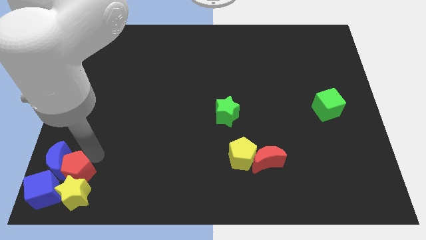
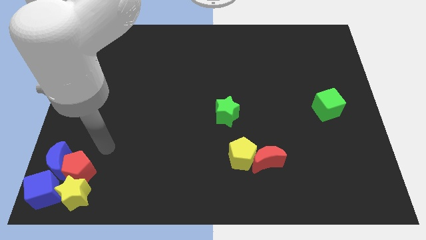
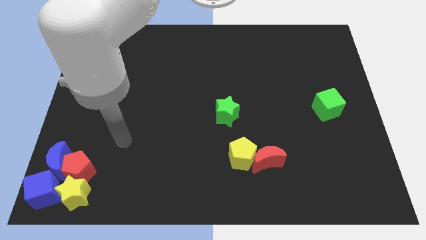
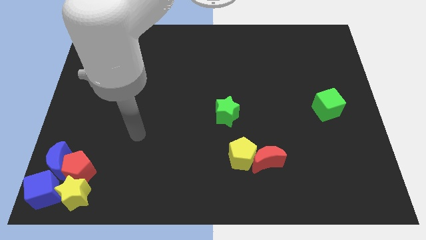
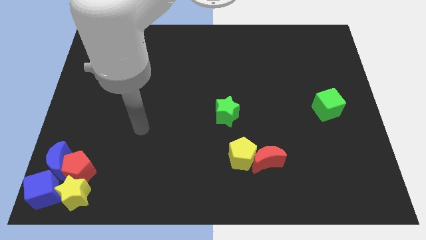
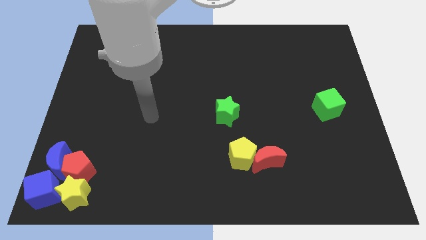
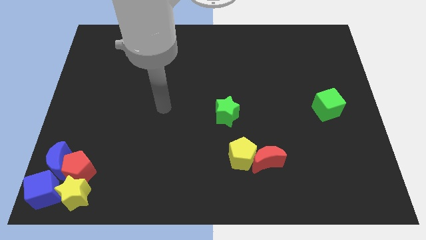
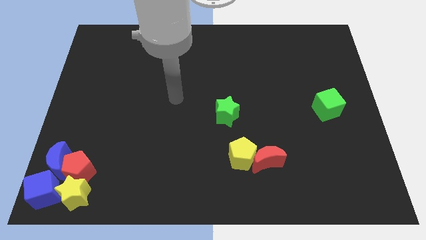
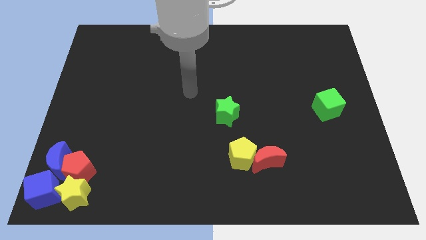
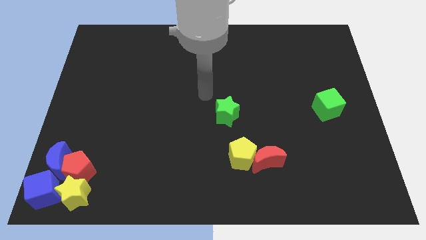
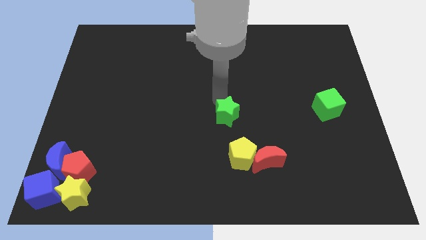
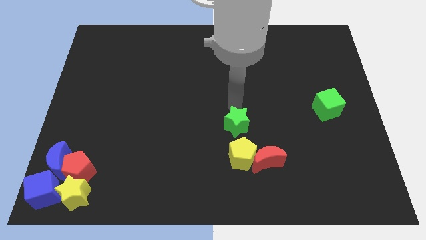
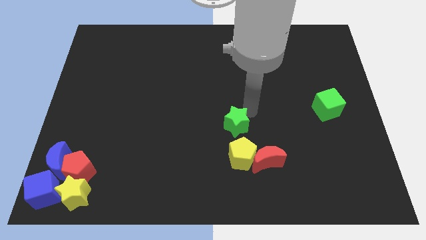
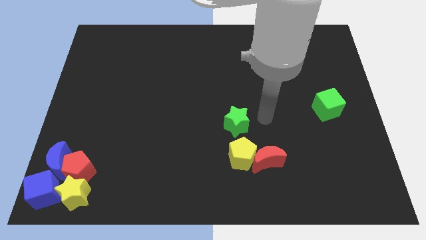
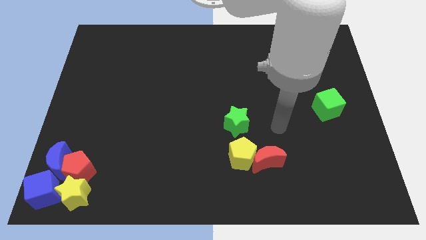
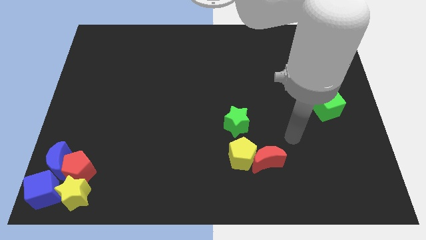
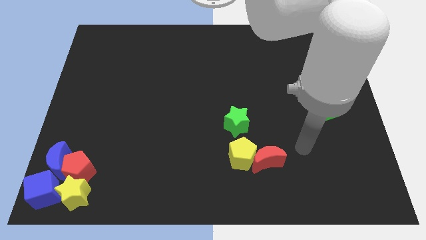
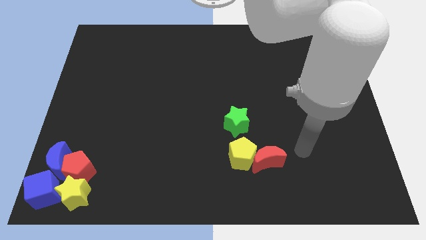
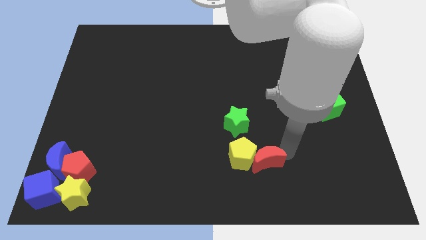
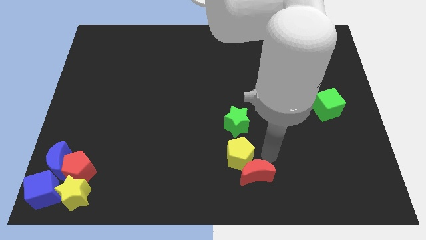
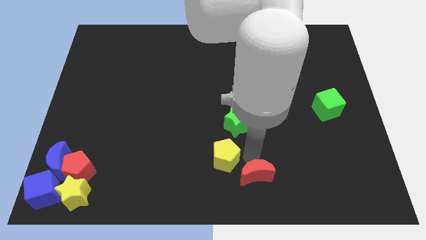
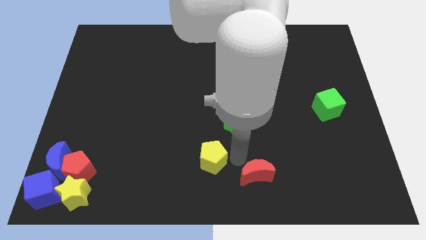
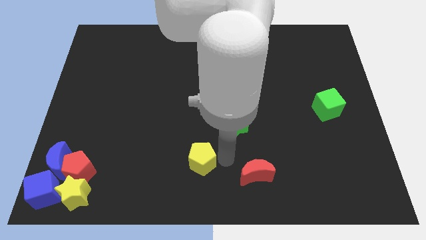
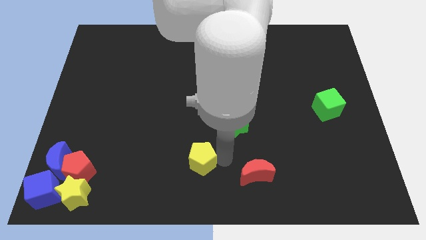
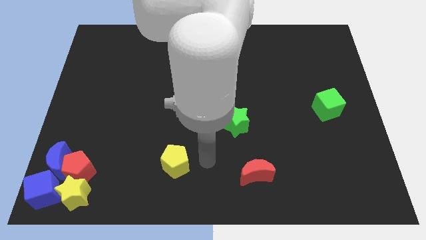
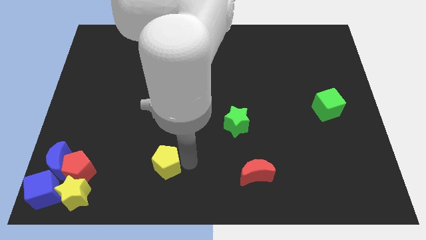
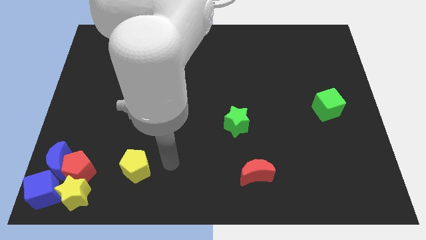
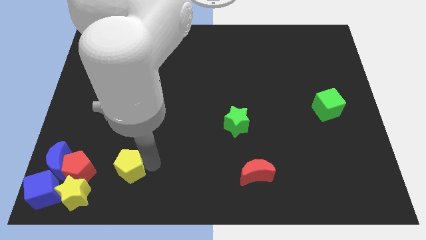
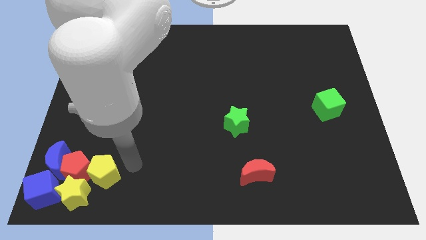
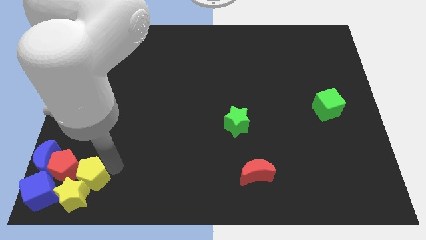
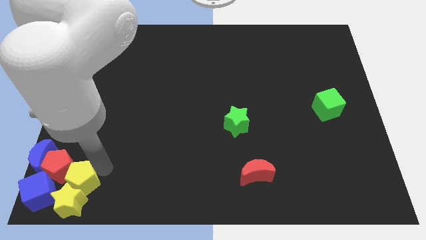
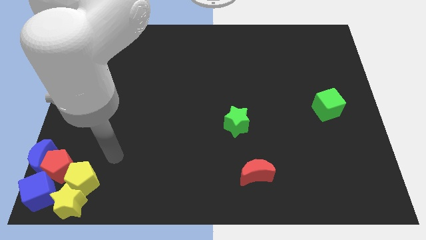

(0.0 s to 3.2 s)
push the yellow pentagon into the yellow star

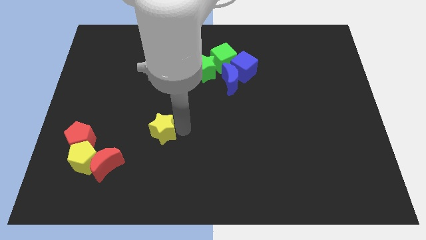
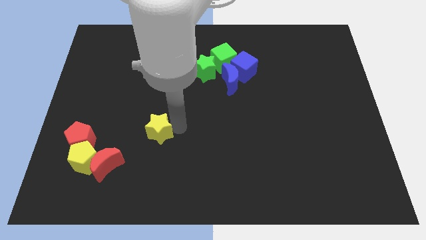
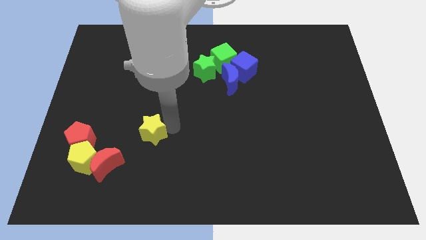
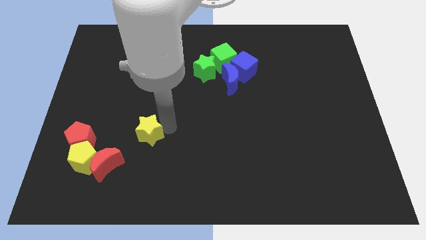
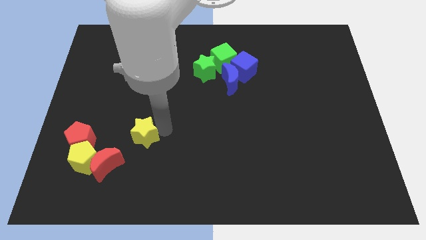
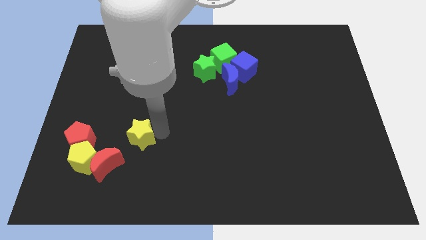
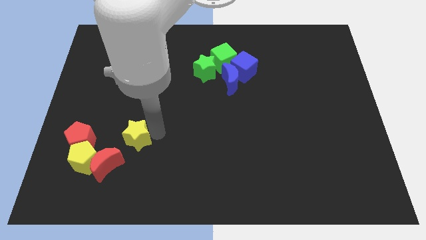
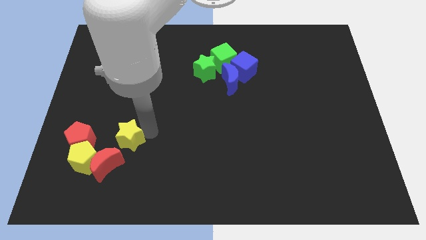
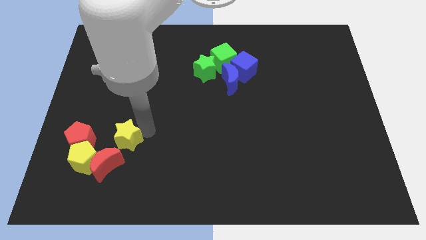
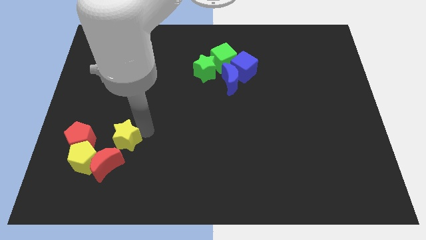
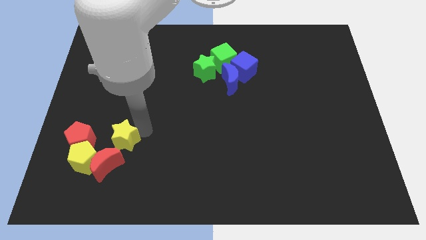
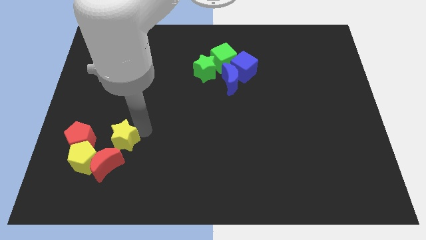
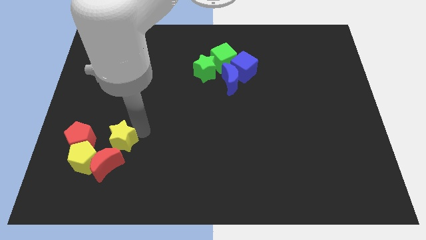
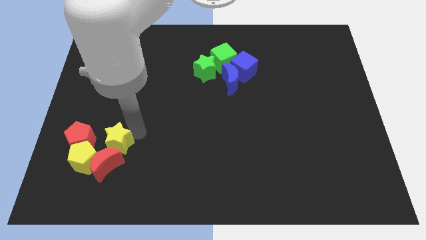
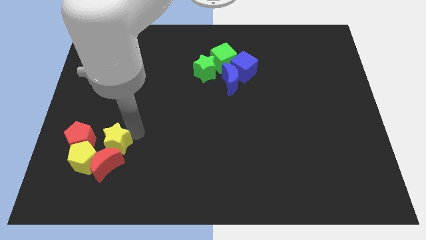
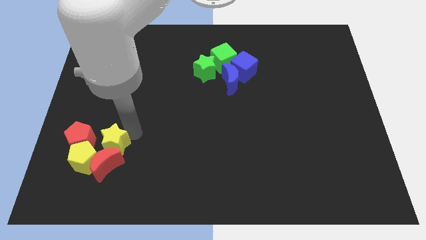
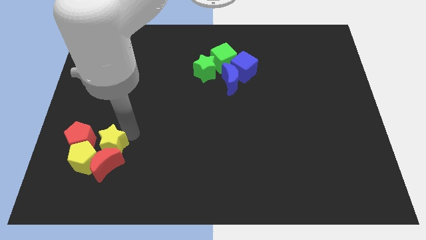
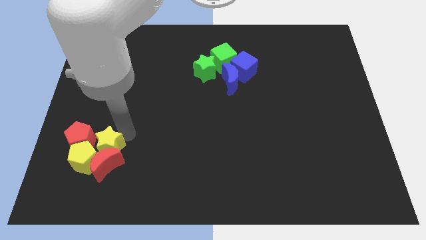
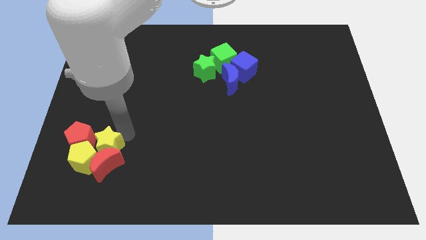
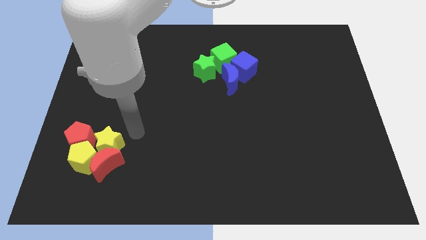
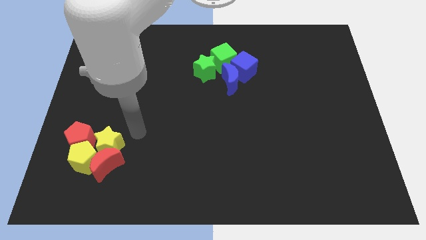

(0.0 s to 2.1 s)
move yellow star into yellow pentagon

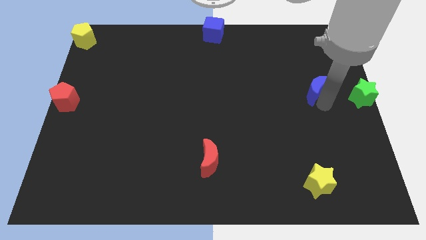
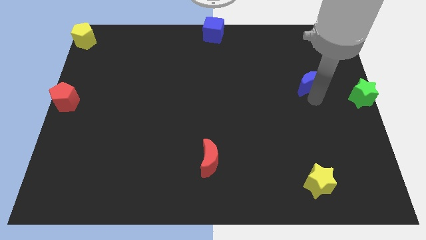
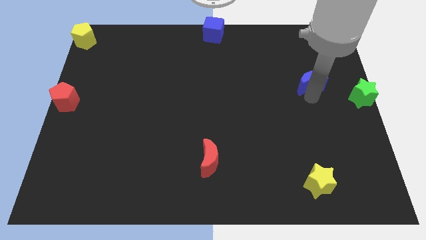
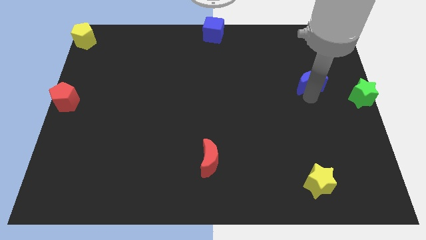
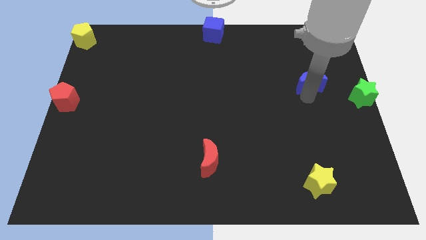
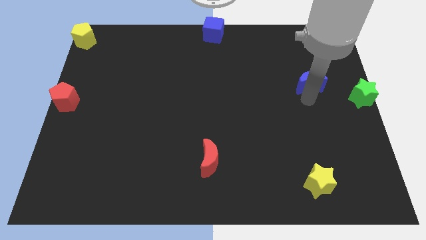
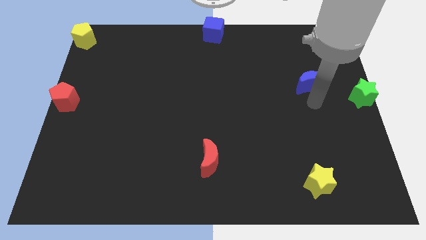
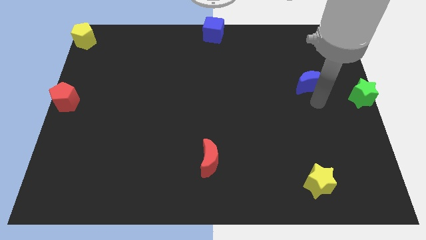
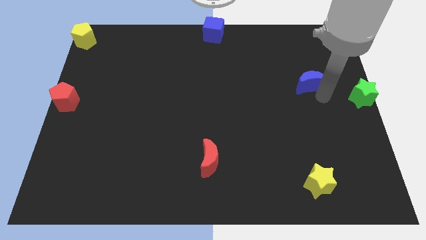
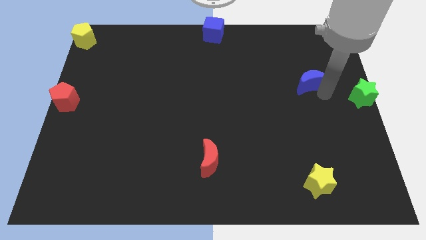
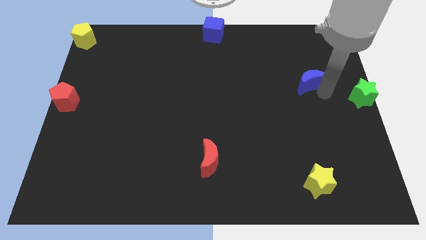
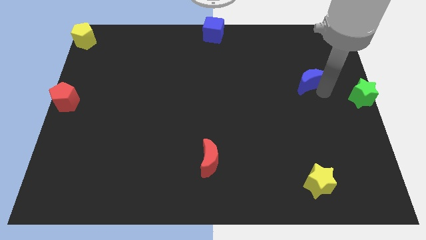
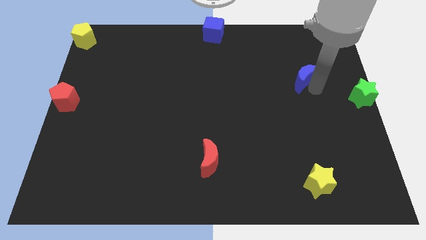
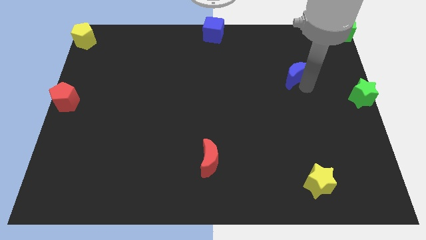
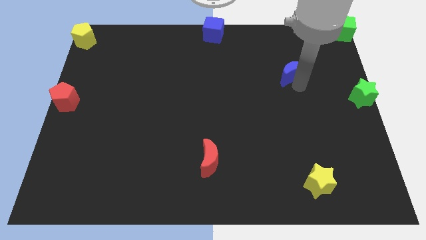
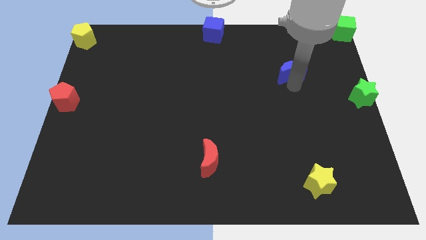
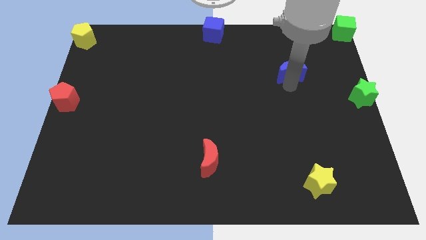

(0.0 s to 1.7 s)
push blue crescent to slightly left upwards

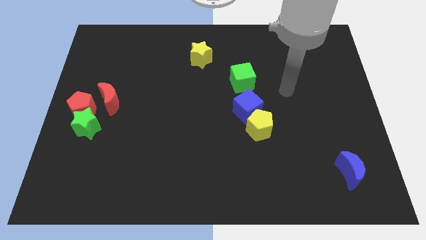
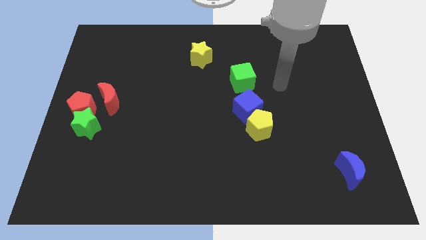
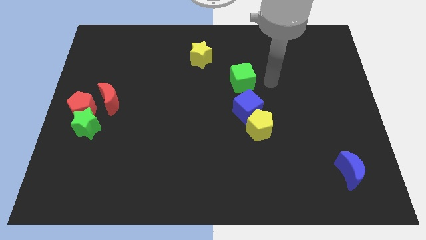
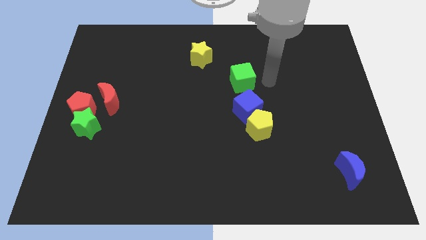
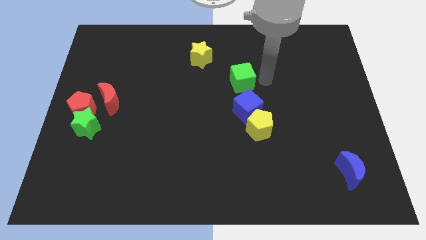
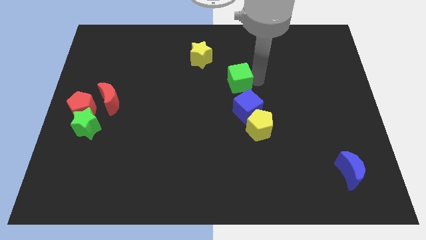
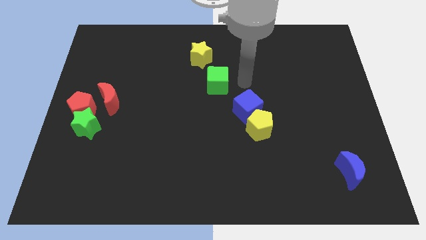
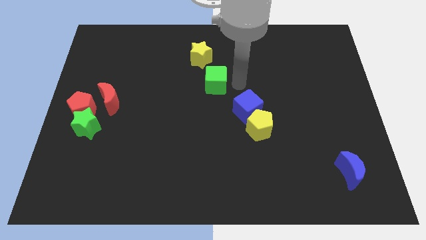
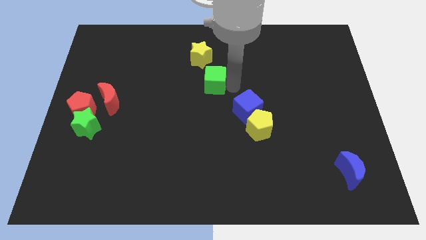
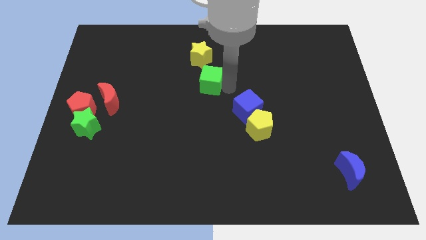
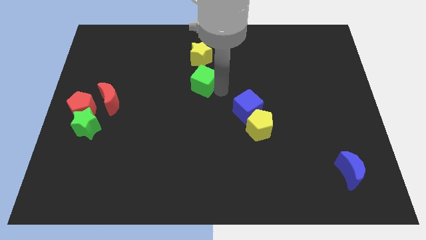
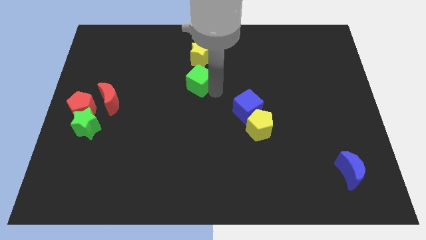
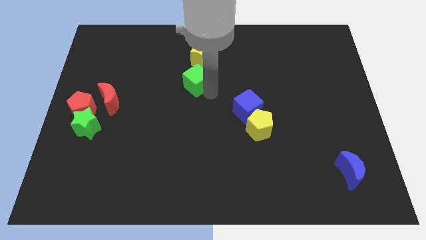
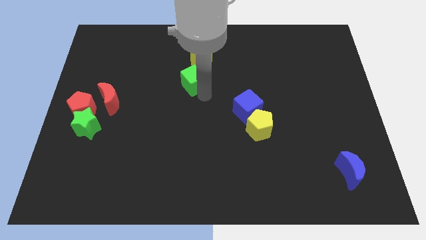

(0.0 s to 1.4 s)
put the green cube below the yellow star

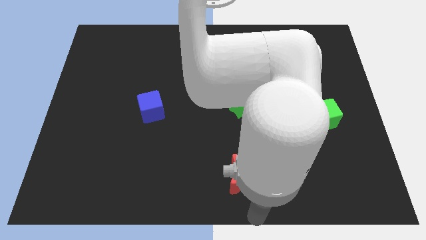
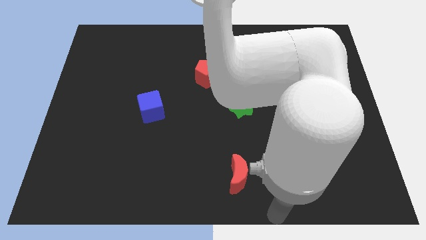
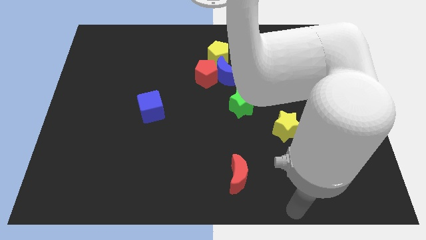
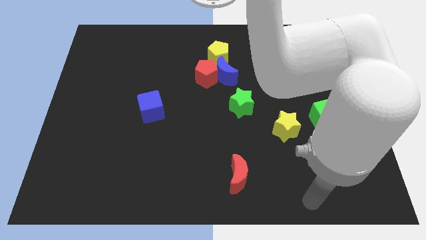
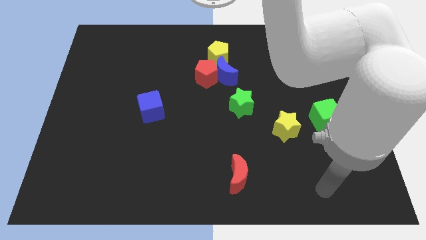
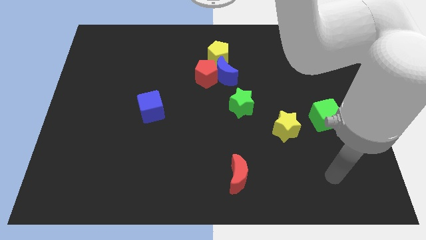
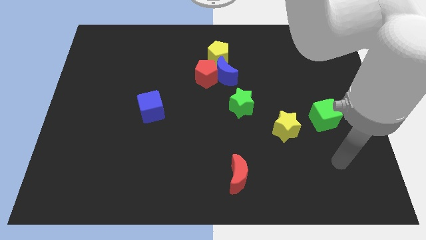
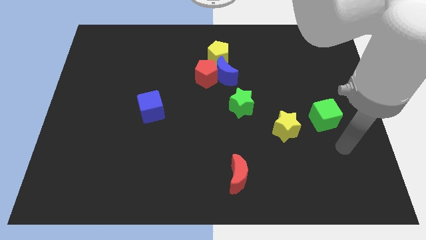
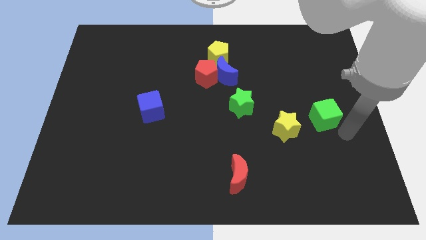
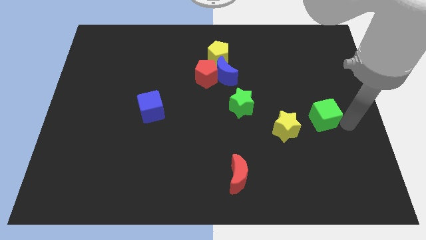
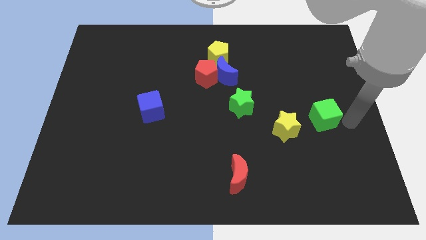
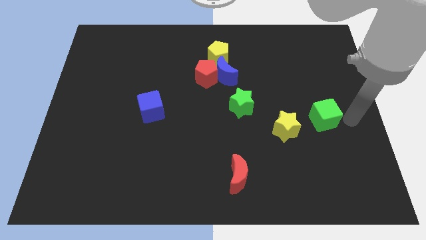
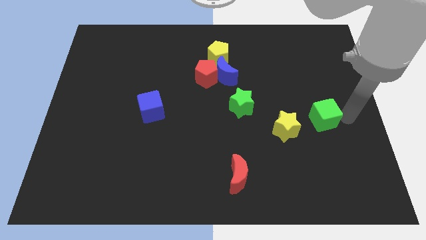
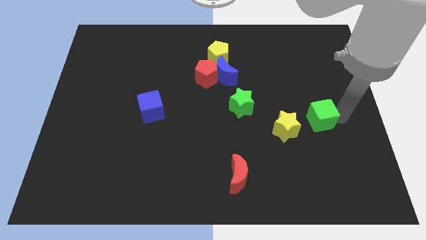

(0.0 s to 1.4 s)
move arm to the right of the green cube
